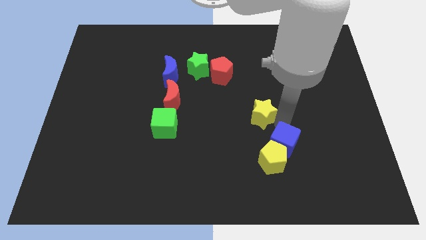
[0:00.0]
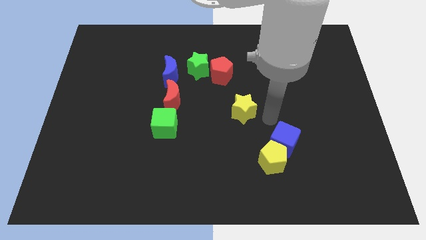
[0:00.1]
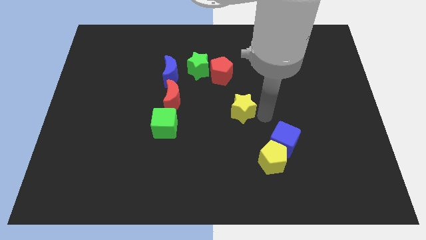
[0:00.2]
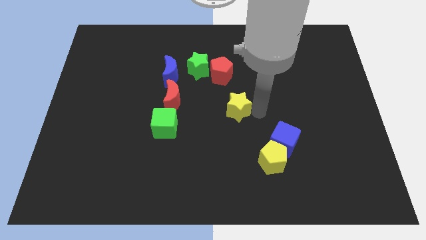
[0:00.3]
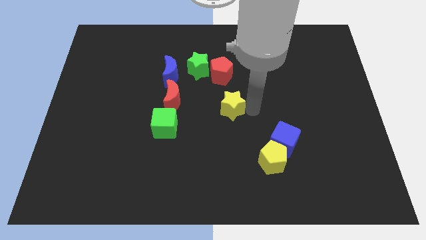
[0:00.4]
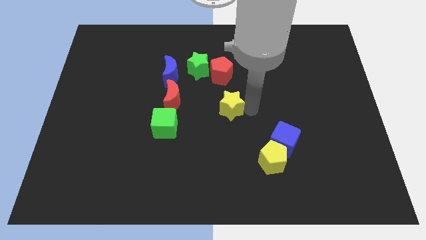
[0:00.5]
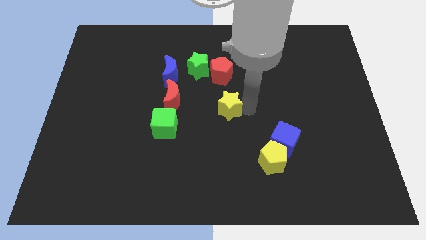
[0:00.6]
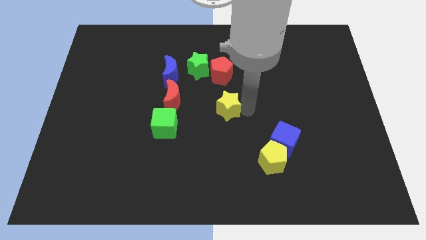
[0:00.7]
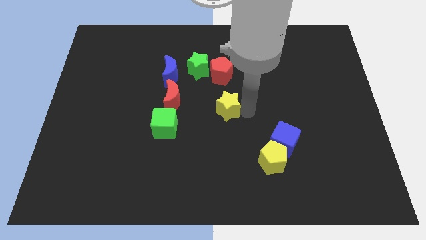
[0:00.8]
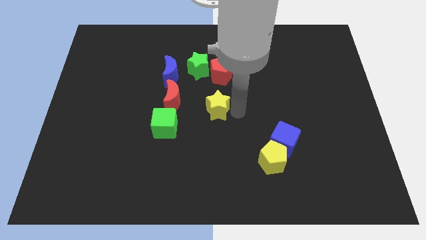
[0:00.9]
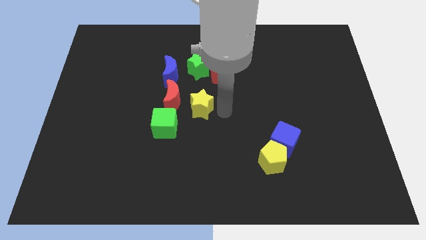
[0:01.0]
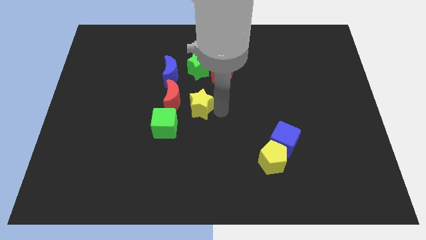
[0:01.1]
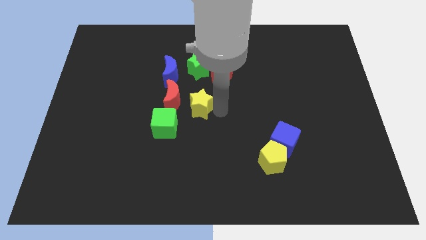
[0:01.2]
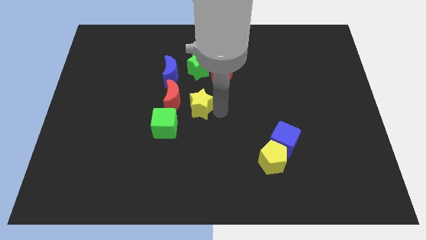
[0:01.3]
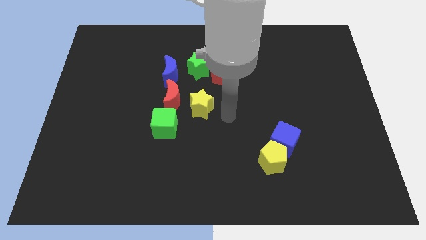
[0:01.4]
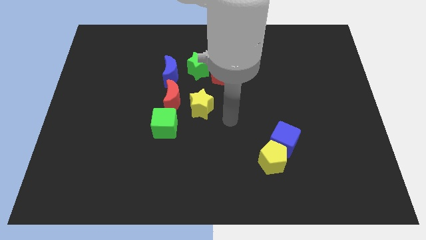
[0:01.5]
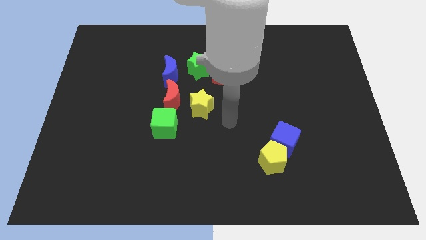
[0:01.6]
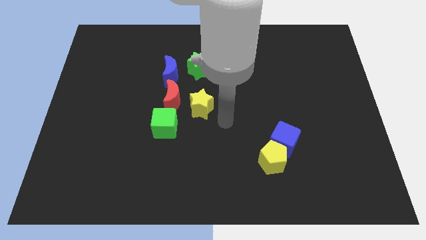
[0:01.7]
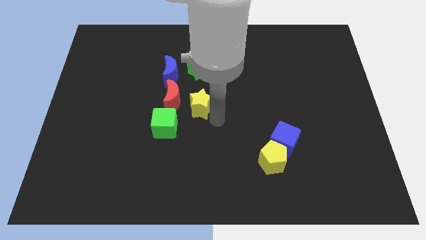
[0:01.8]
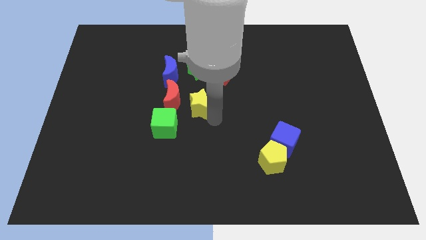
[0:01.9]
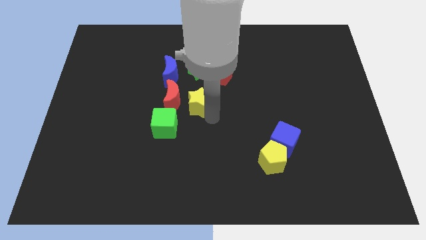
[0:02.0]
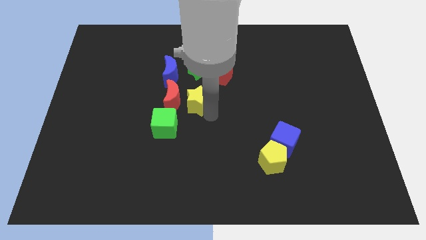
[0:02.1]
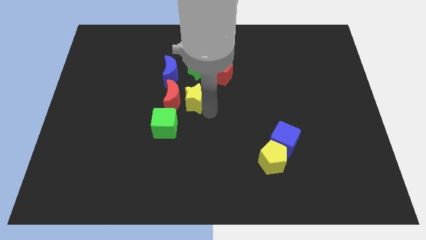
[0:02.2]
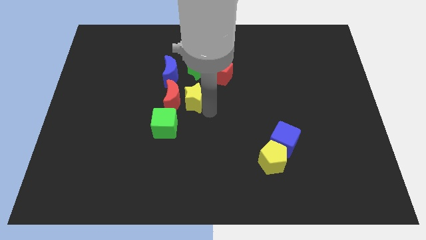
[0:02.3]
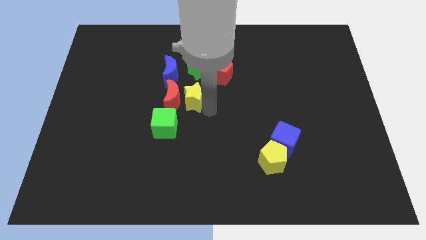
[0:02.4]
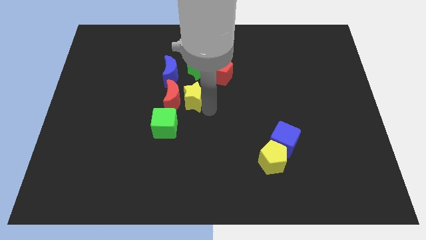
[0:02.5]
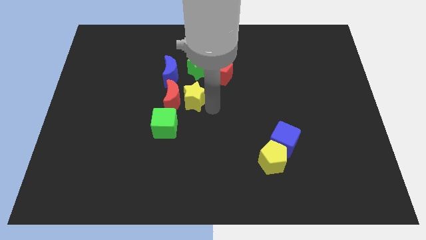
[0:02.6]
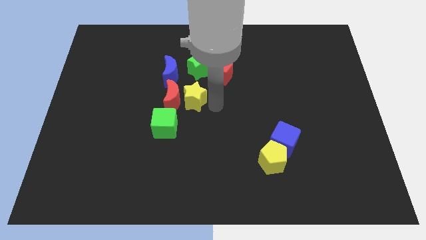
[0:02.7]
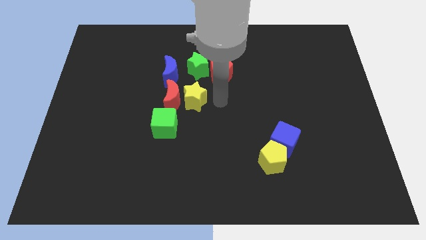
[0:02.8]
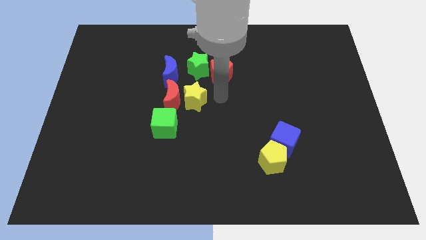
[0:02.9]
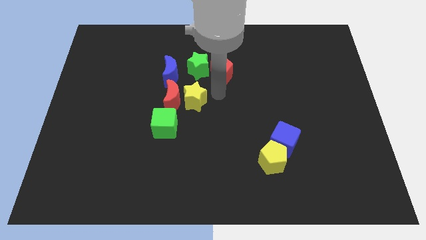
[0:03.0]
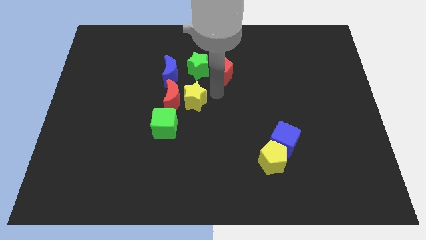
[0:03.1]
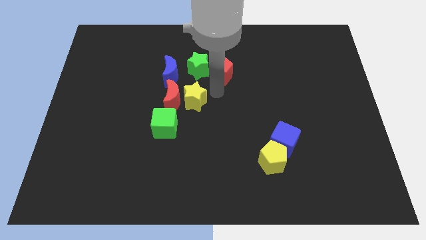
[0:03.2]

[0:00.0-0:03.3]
slide the yellow star to the right side of the red crescent

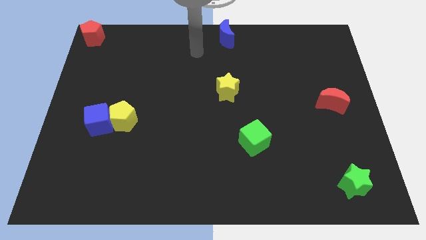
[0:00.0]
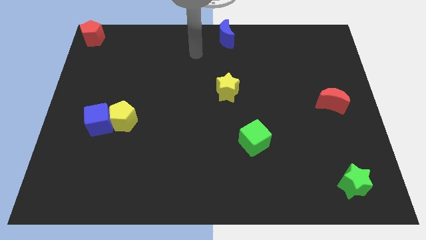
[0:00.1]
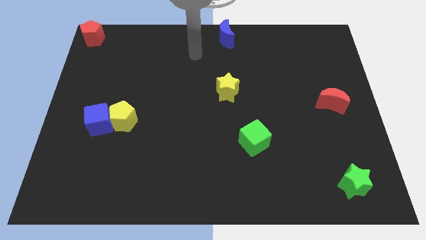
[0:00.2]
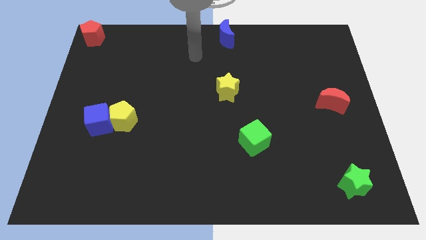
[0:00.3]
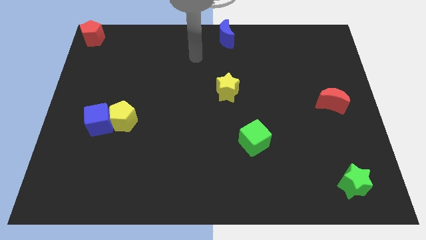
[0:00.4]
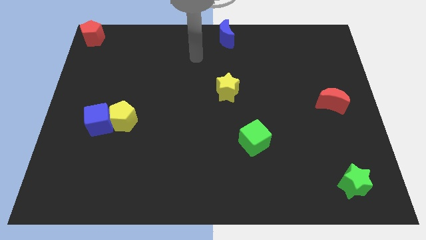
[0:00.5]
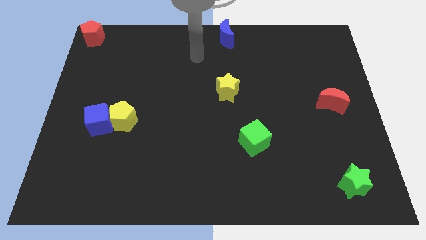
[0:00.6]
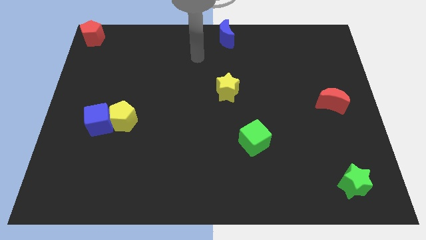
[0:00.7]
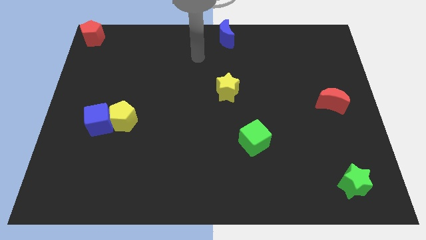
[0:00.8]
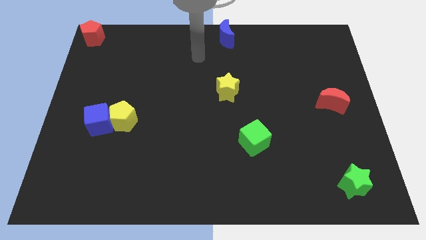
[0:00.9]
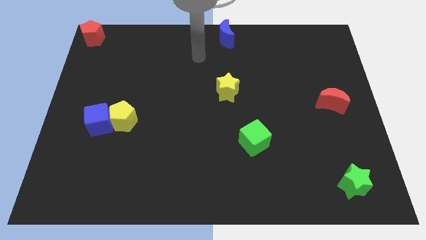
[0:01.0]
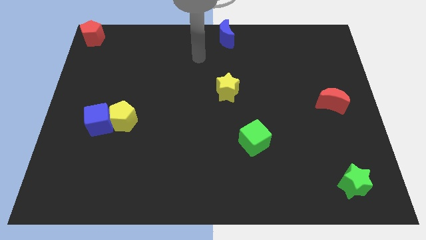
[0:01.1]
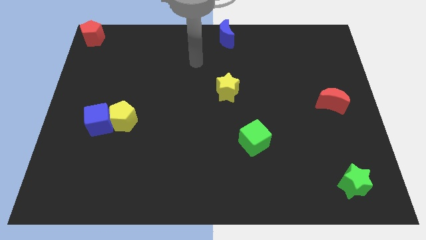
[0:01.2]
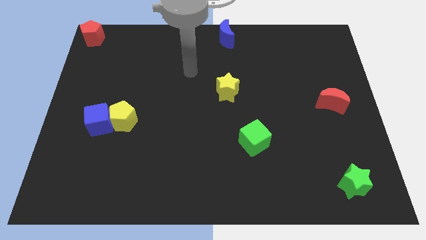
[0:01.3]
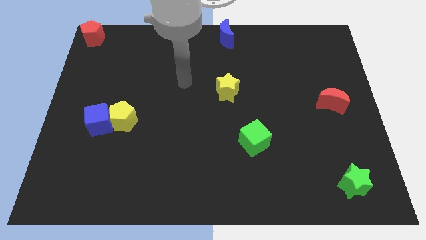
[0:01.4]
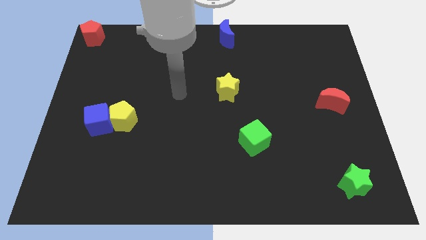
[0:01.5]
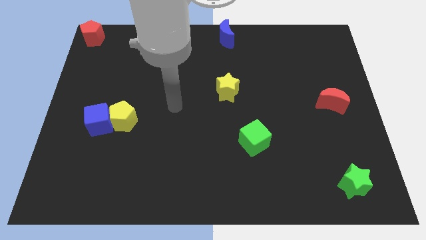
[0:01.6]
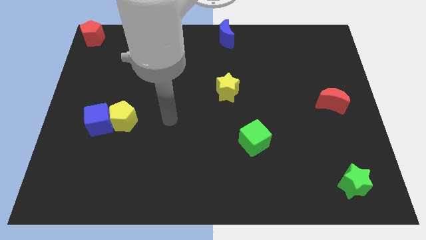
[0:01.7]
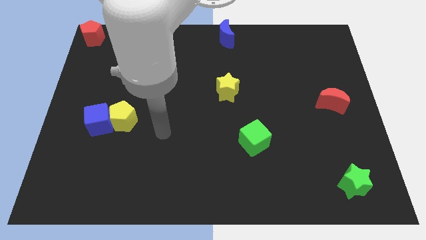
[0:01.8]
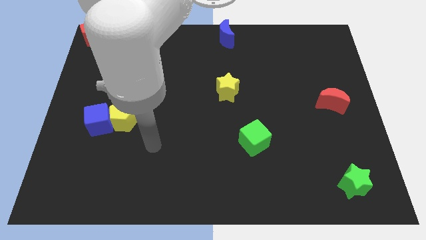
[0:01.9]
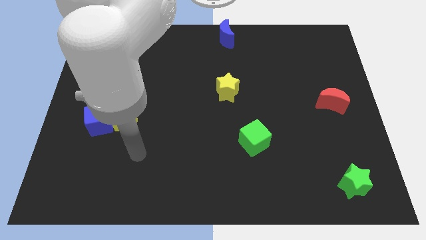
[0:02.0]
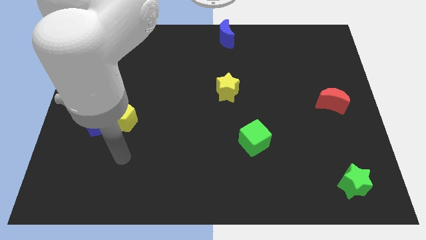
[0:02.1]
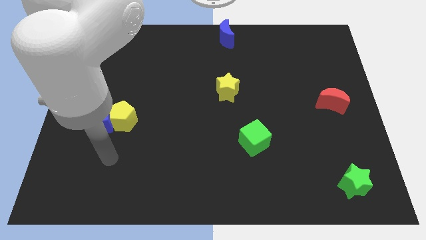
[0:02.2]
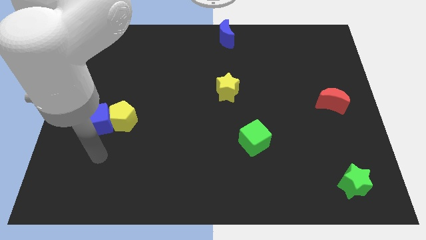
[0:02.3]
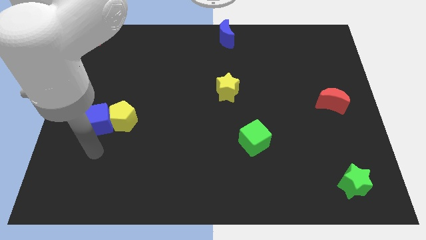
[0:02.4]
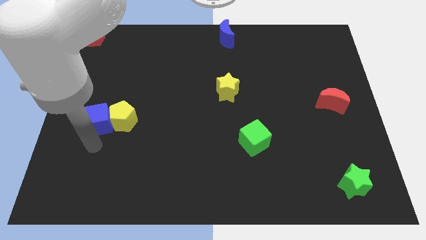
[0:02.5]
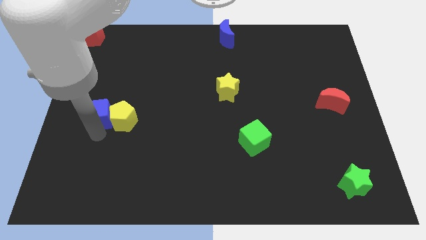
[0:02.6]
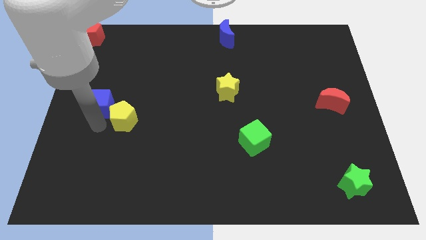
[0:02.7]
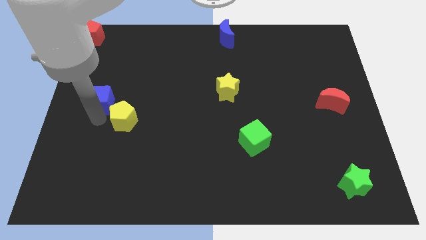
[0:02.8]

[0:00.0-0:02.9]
move your arm towards the blue cube

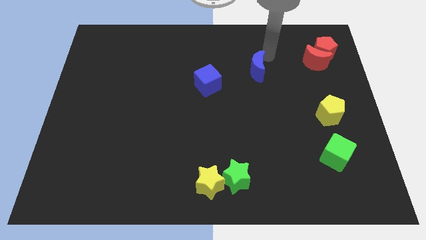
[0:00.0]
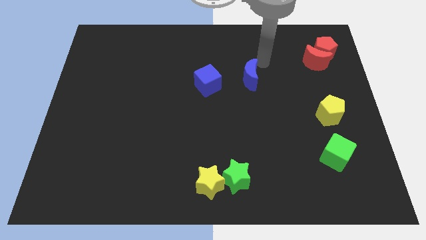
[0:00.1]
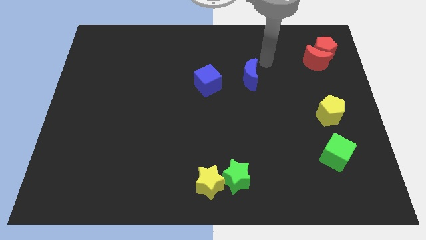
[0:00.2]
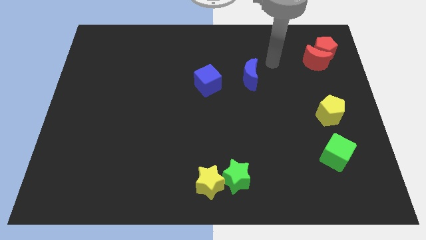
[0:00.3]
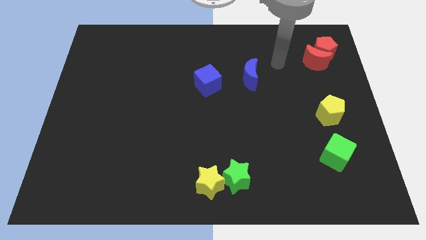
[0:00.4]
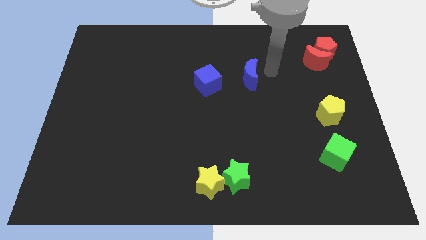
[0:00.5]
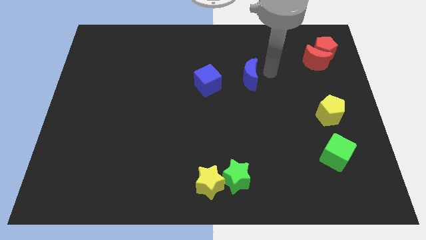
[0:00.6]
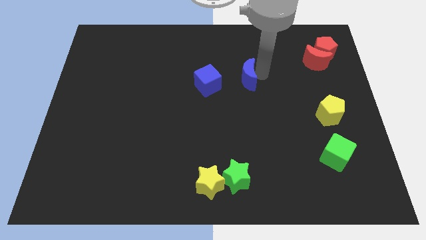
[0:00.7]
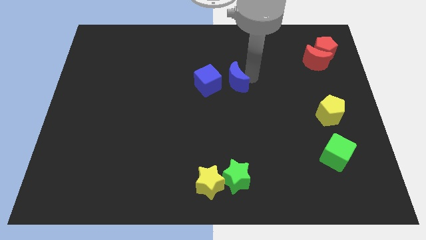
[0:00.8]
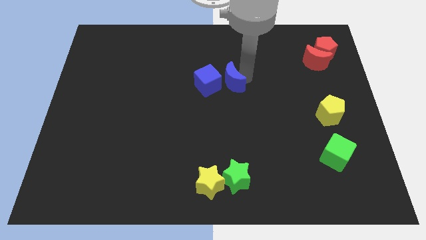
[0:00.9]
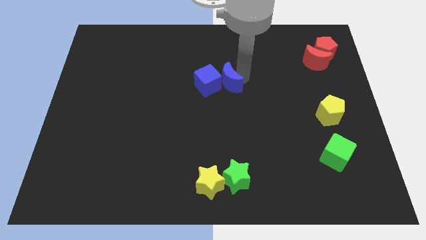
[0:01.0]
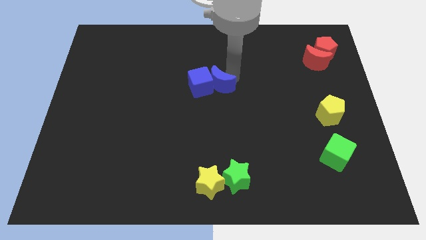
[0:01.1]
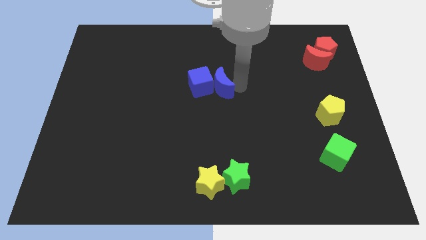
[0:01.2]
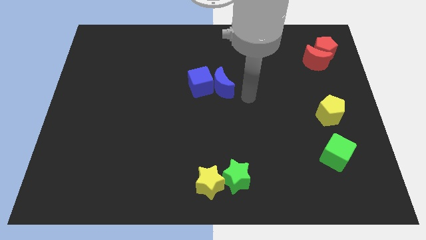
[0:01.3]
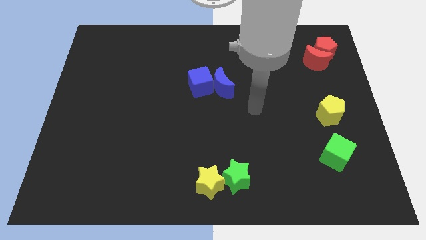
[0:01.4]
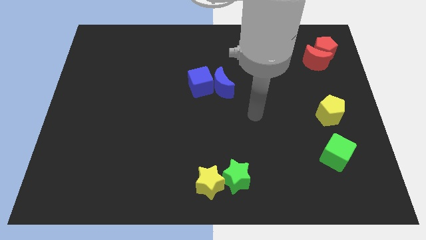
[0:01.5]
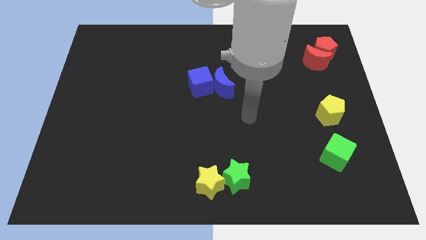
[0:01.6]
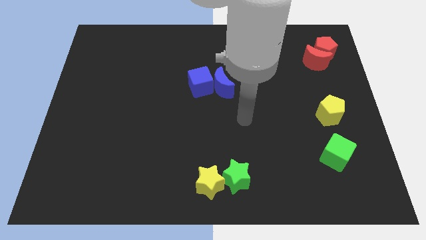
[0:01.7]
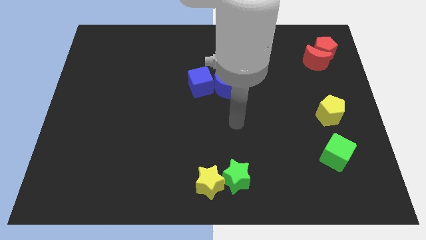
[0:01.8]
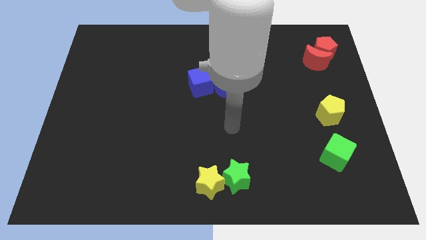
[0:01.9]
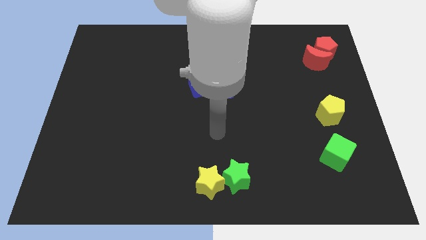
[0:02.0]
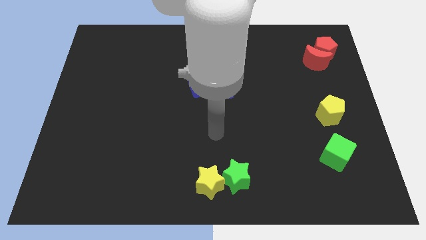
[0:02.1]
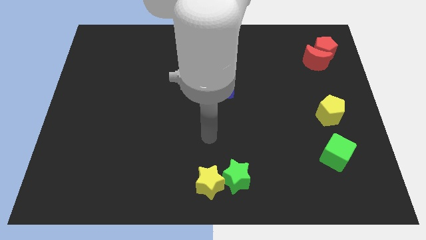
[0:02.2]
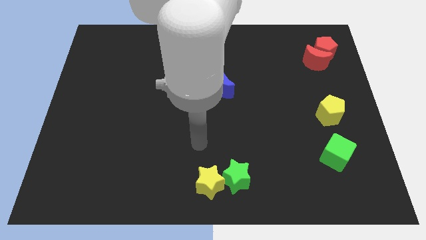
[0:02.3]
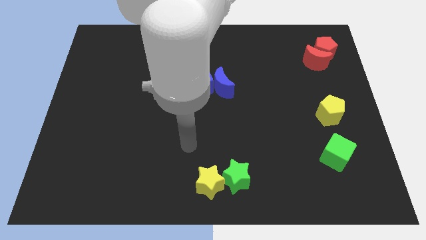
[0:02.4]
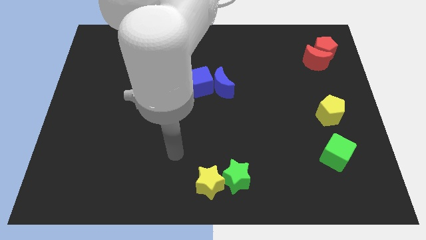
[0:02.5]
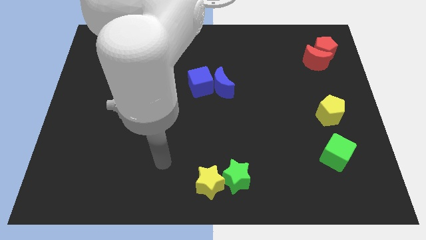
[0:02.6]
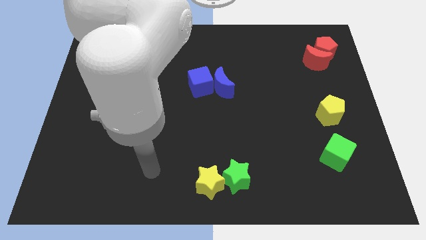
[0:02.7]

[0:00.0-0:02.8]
push blue crescent into blue cube
